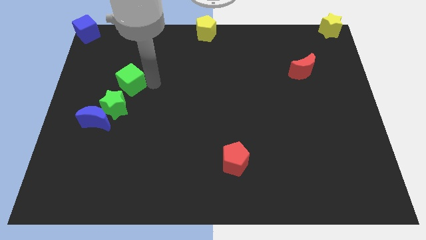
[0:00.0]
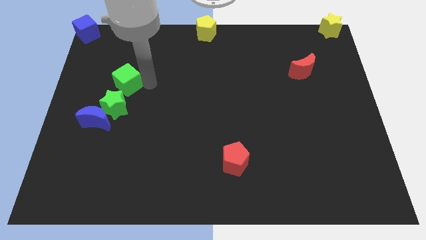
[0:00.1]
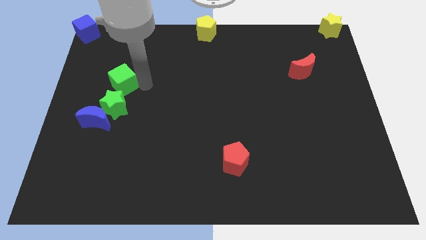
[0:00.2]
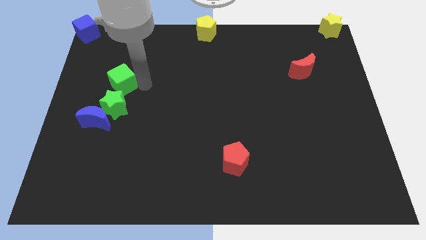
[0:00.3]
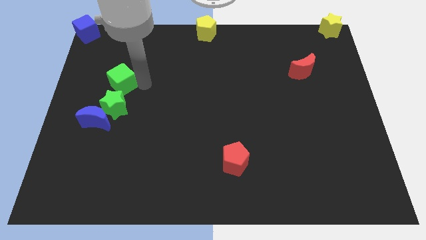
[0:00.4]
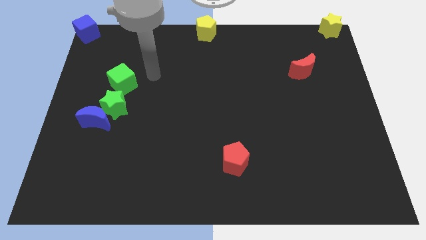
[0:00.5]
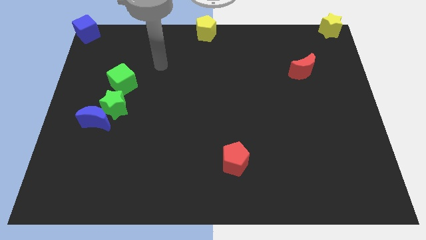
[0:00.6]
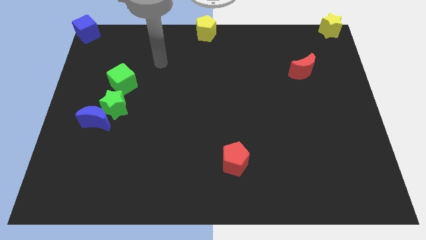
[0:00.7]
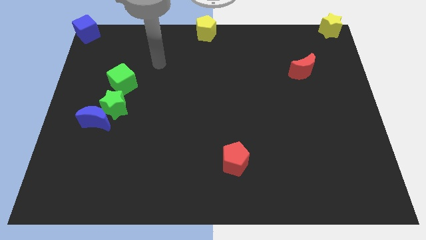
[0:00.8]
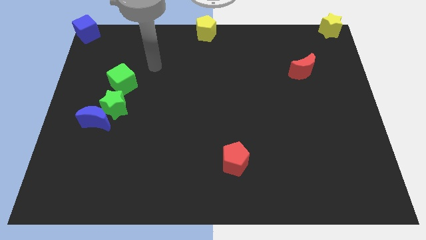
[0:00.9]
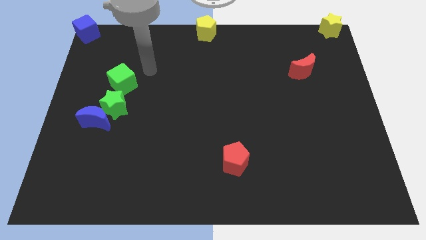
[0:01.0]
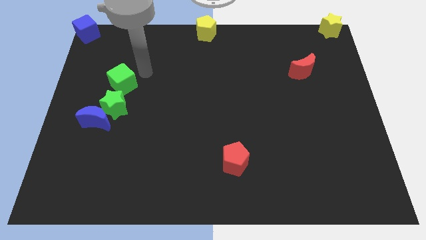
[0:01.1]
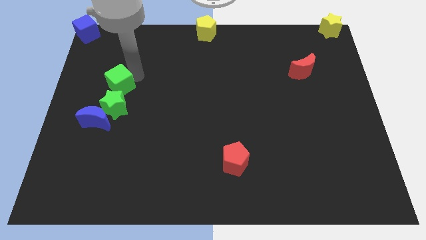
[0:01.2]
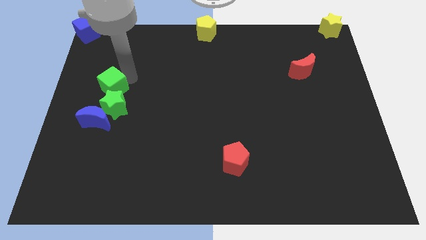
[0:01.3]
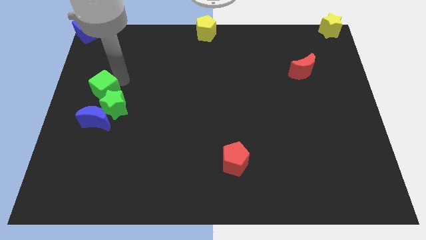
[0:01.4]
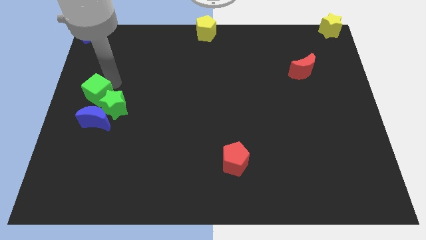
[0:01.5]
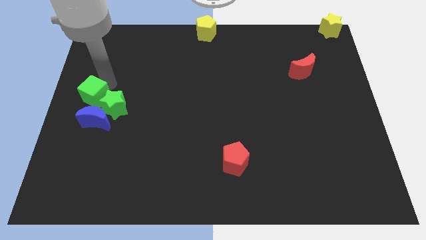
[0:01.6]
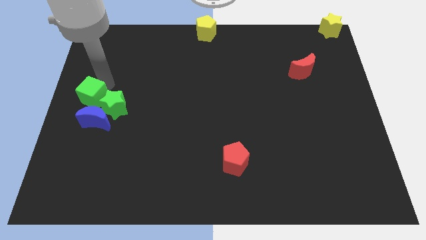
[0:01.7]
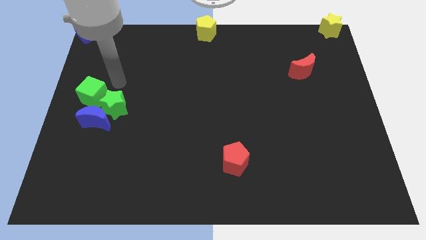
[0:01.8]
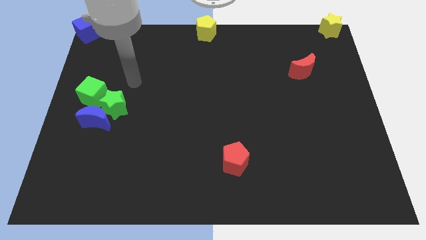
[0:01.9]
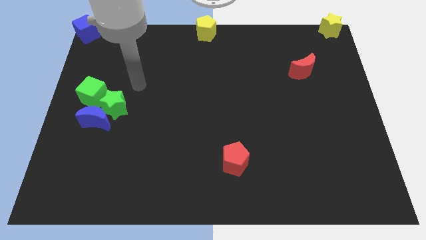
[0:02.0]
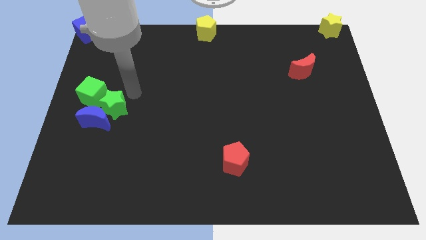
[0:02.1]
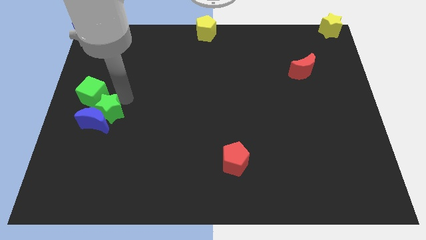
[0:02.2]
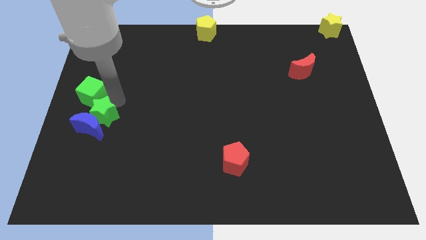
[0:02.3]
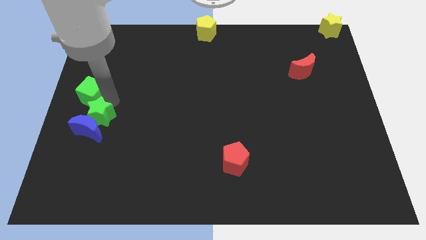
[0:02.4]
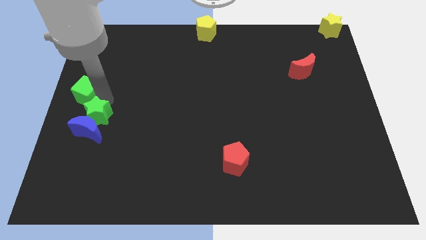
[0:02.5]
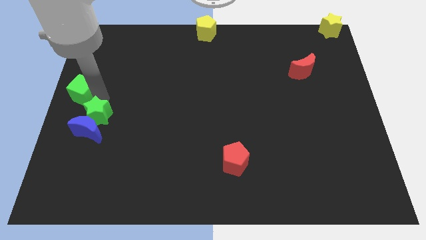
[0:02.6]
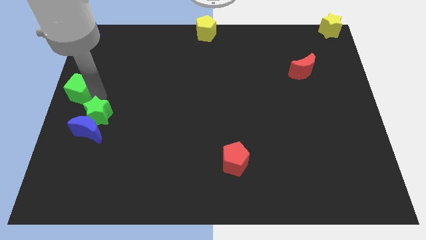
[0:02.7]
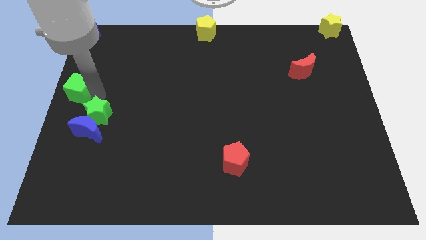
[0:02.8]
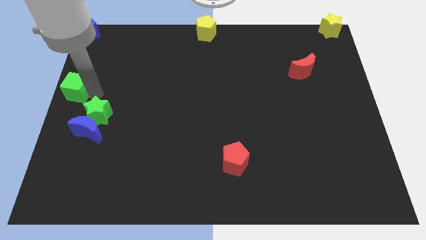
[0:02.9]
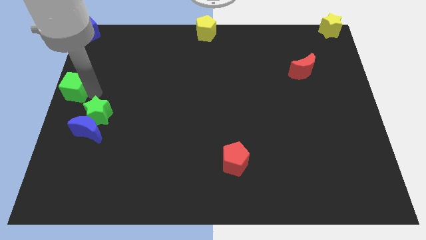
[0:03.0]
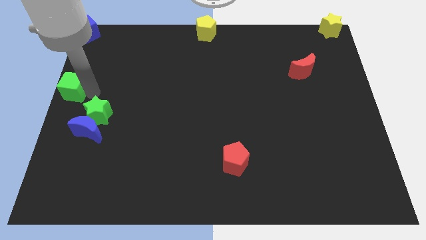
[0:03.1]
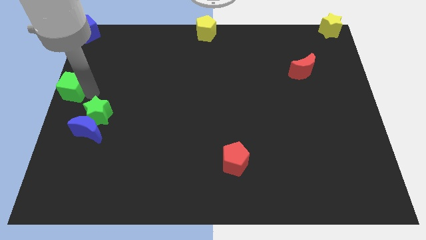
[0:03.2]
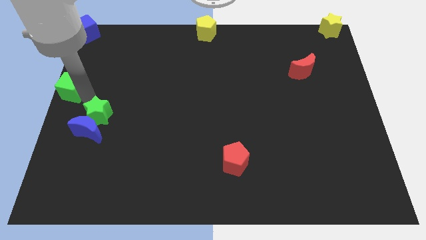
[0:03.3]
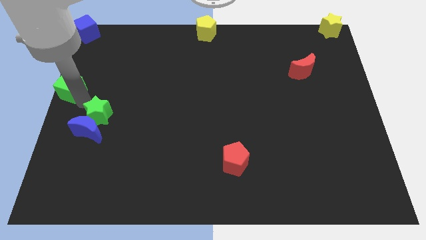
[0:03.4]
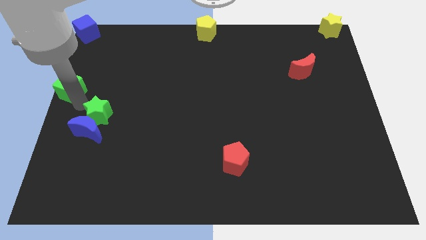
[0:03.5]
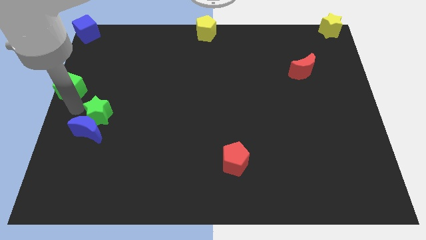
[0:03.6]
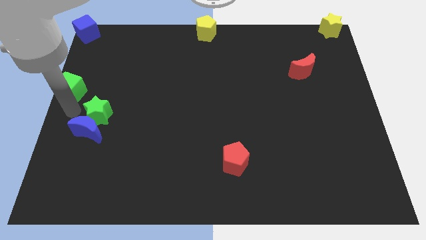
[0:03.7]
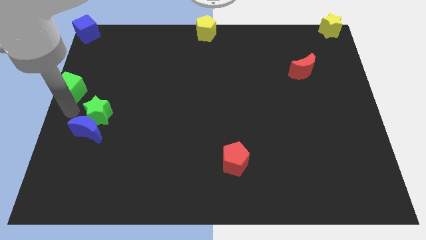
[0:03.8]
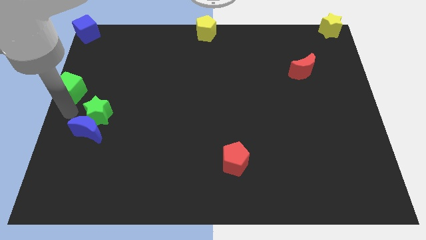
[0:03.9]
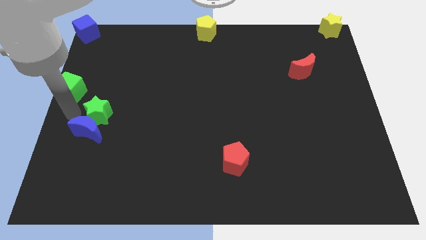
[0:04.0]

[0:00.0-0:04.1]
separate the green cube from the green star

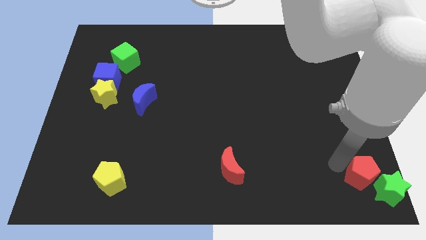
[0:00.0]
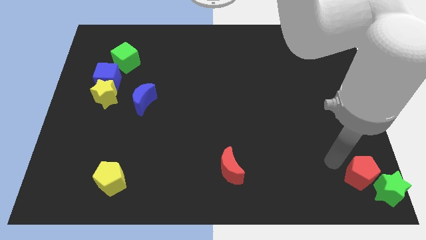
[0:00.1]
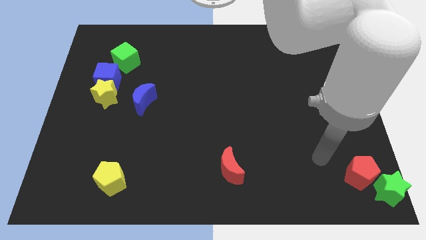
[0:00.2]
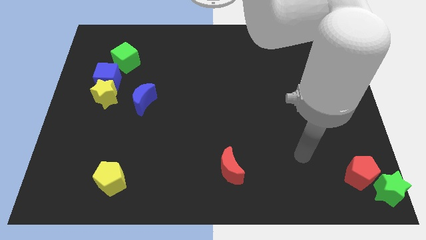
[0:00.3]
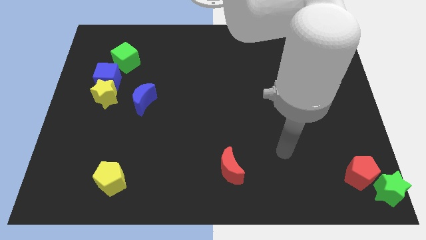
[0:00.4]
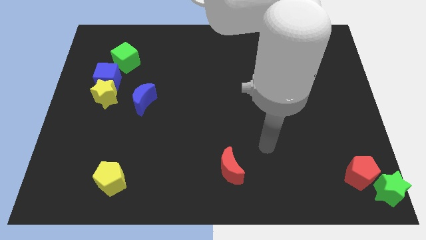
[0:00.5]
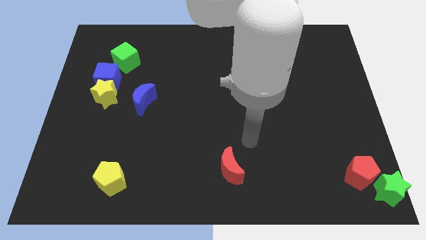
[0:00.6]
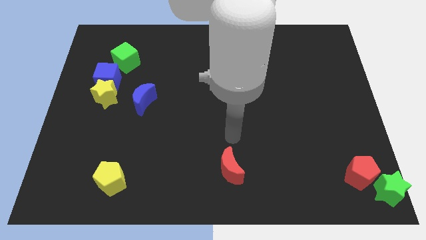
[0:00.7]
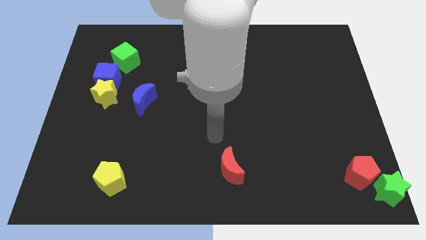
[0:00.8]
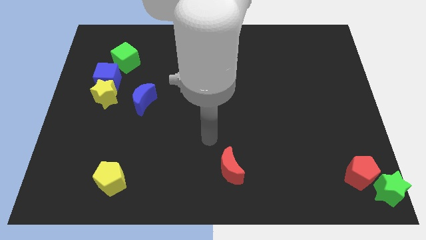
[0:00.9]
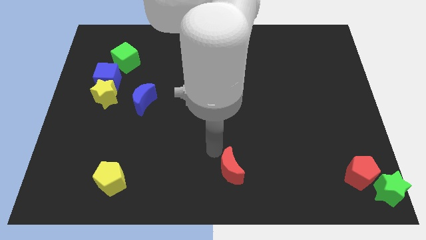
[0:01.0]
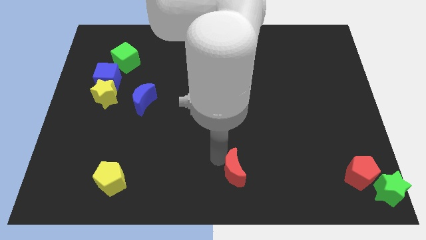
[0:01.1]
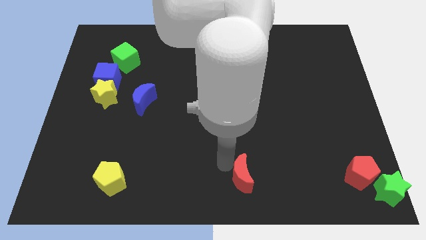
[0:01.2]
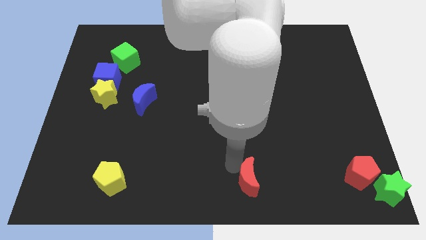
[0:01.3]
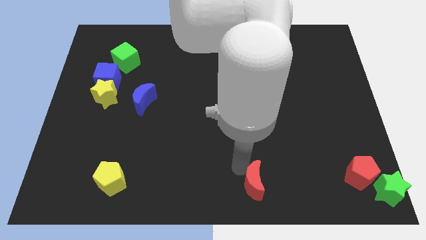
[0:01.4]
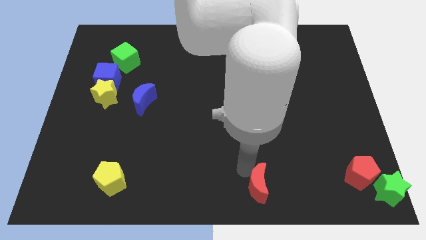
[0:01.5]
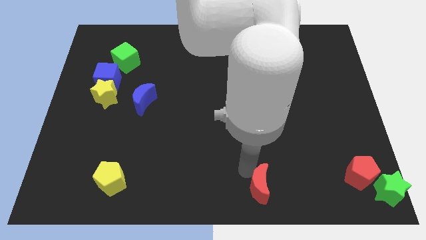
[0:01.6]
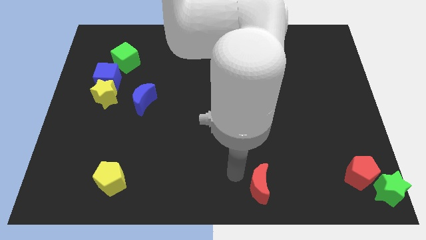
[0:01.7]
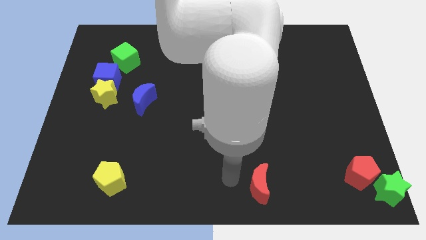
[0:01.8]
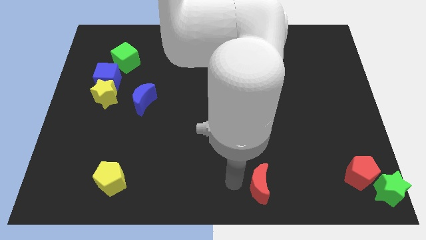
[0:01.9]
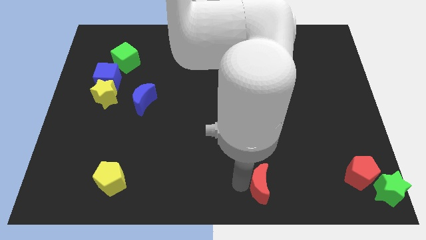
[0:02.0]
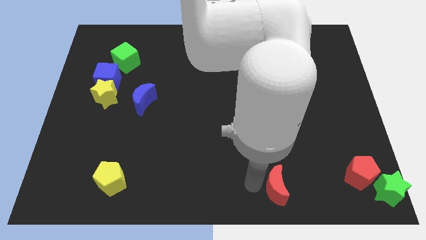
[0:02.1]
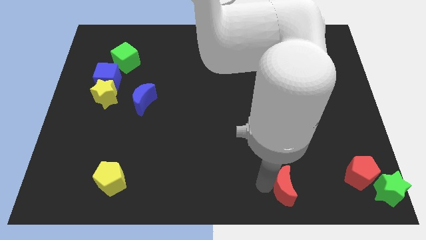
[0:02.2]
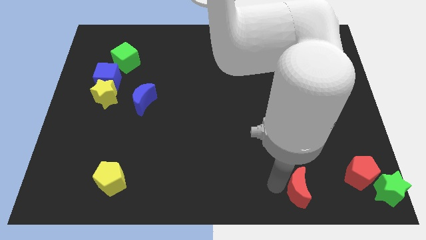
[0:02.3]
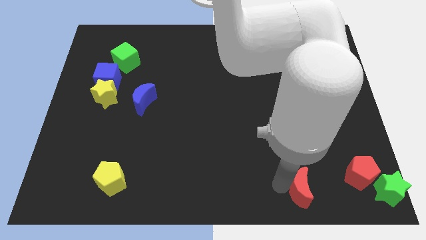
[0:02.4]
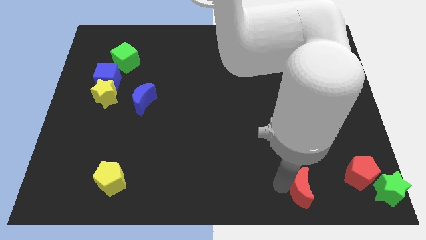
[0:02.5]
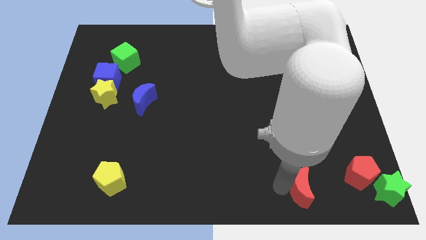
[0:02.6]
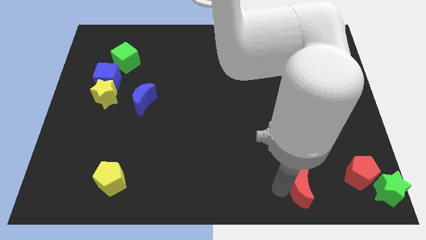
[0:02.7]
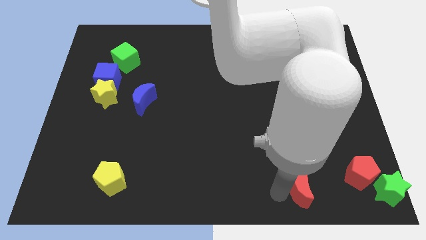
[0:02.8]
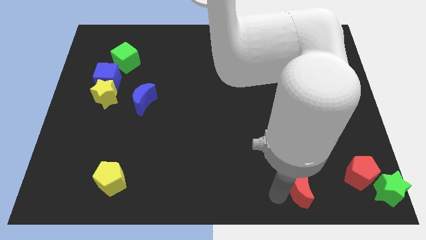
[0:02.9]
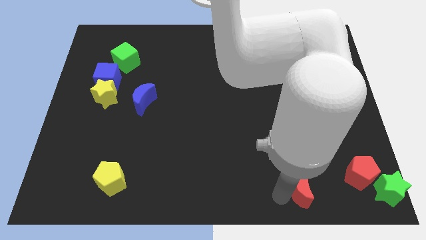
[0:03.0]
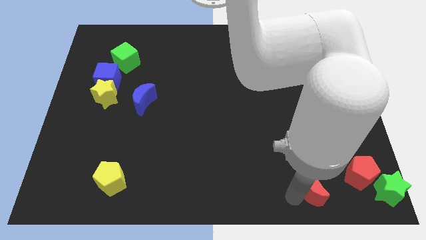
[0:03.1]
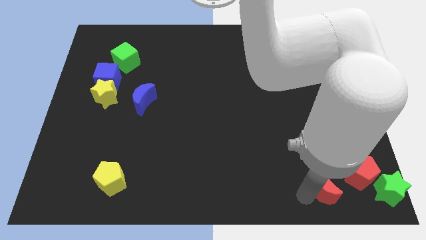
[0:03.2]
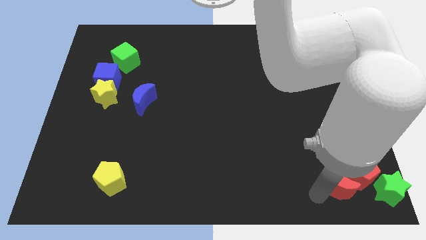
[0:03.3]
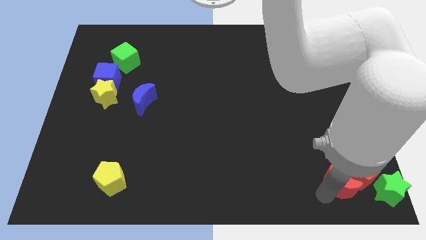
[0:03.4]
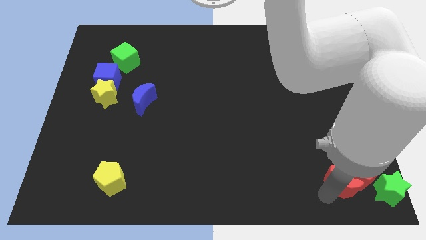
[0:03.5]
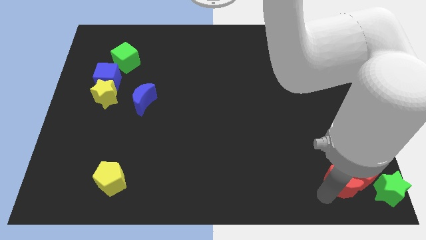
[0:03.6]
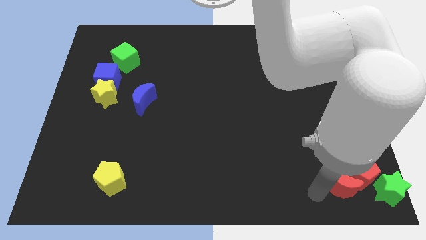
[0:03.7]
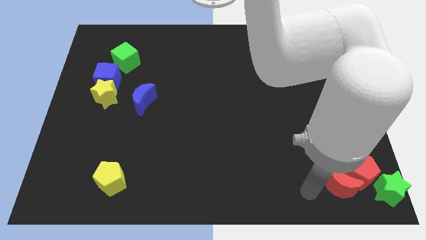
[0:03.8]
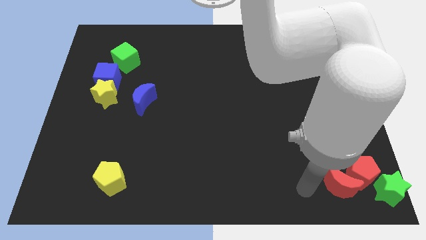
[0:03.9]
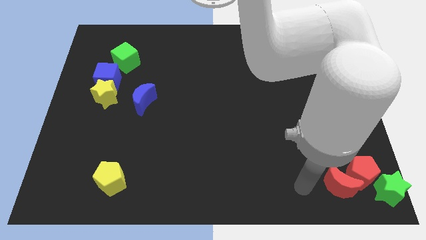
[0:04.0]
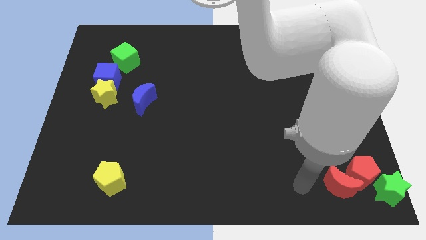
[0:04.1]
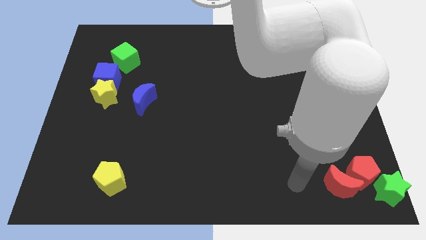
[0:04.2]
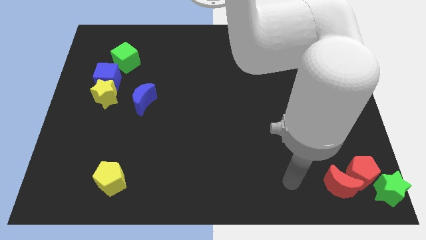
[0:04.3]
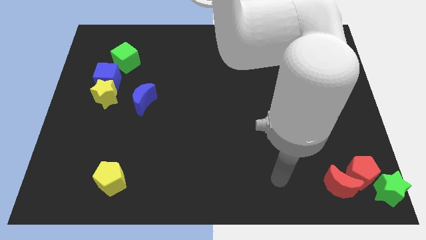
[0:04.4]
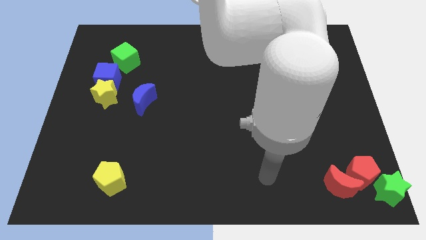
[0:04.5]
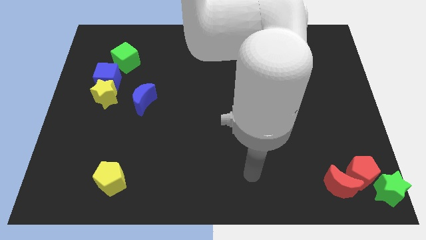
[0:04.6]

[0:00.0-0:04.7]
push the red crescent into the red pentagon

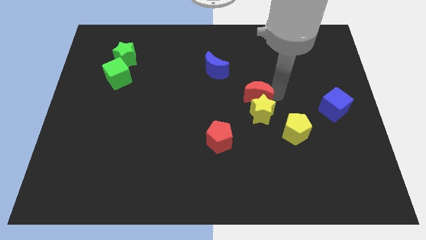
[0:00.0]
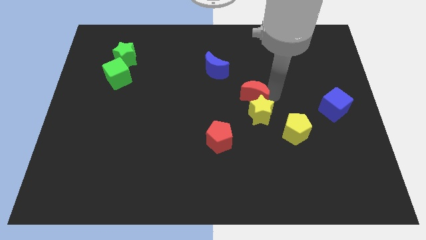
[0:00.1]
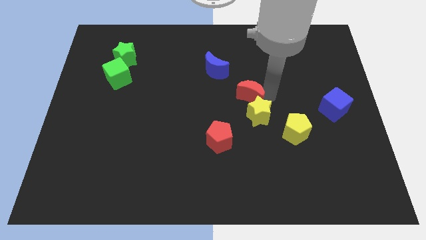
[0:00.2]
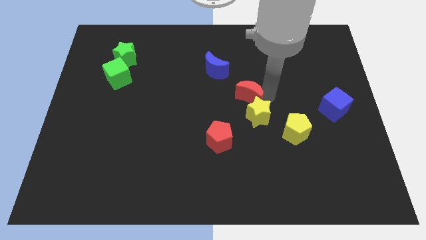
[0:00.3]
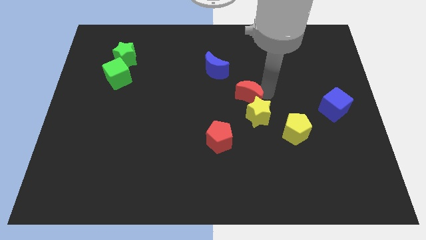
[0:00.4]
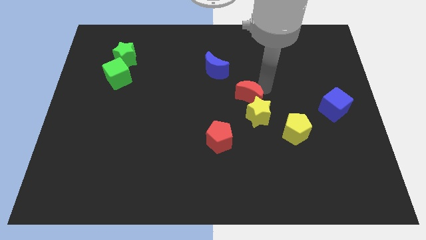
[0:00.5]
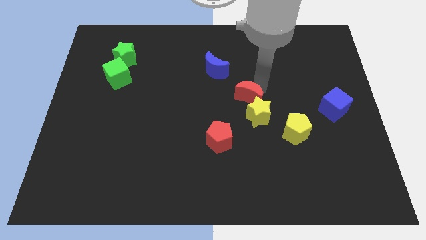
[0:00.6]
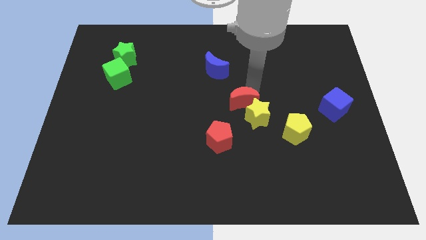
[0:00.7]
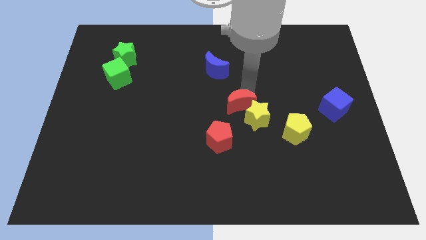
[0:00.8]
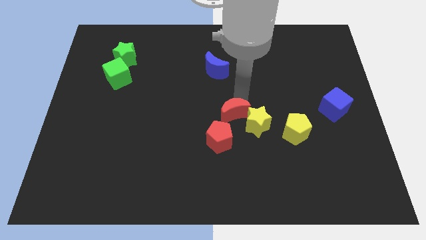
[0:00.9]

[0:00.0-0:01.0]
push the red moon slightly downwards
